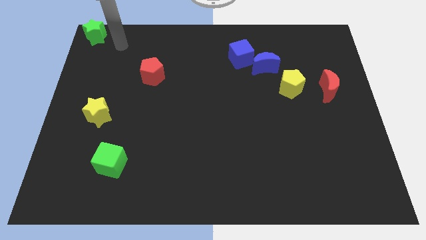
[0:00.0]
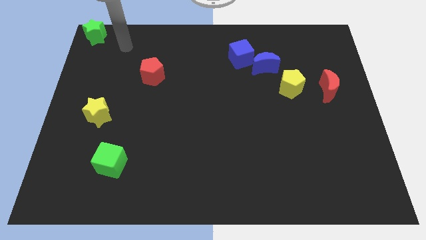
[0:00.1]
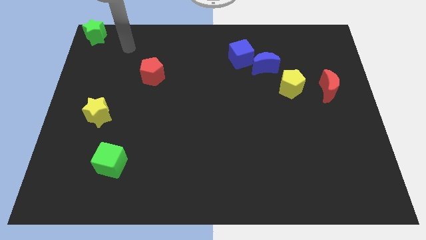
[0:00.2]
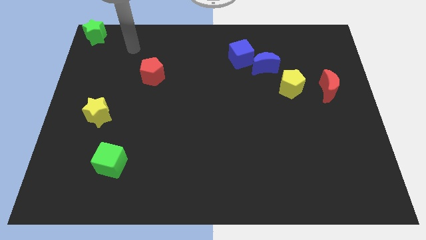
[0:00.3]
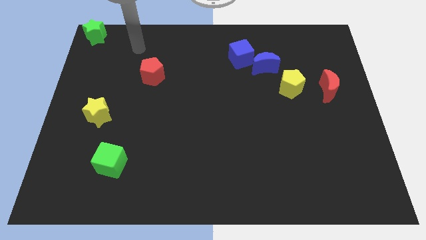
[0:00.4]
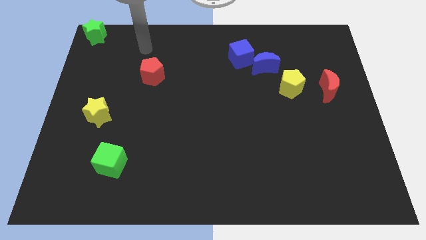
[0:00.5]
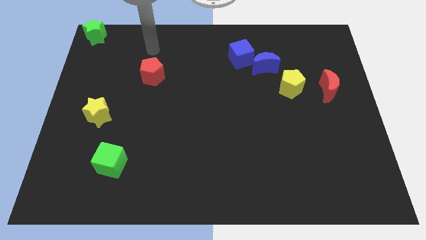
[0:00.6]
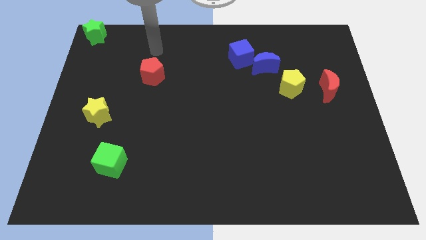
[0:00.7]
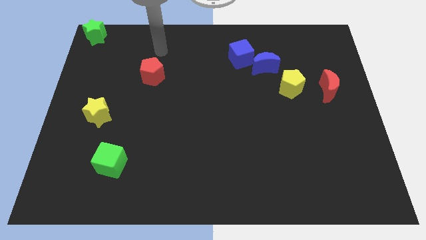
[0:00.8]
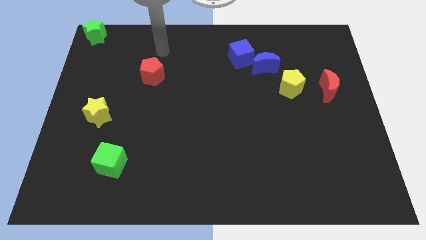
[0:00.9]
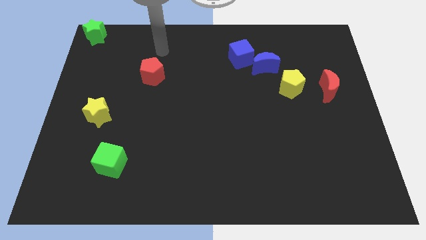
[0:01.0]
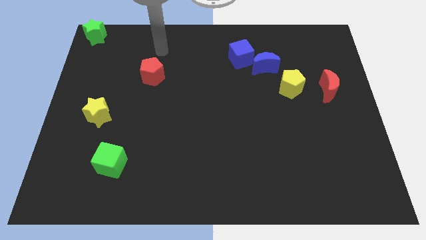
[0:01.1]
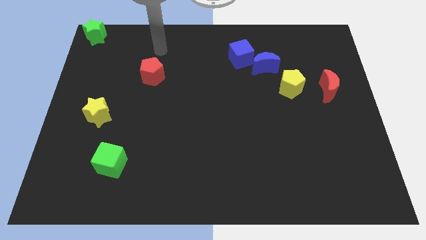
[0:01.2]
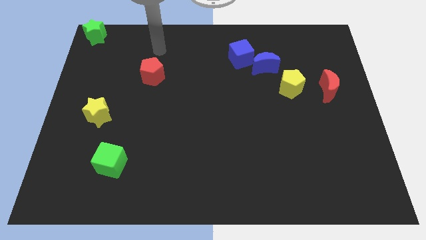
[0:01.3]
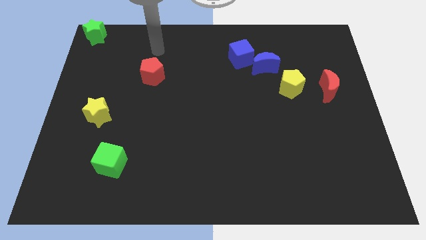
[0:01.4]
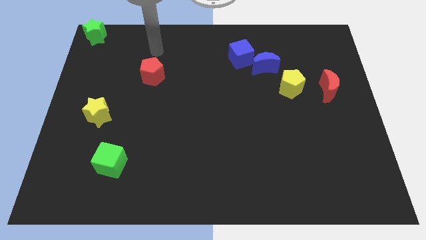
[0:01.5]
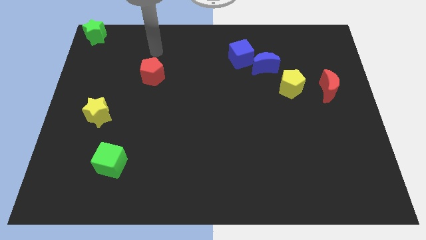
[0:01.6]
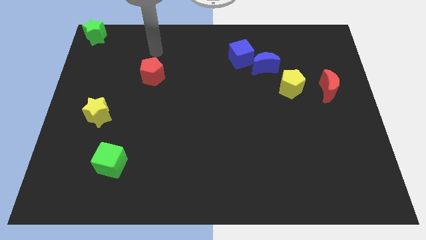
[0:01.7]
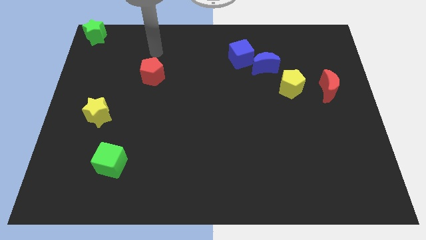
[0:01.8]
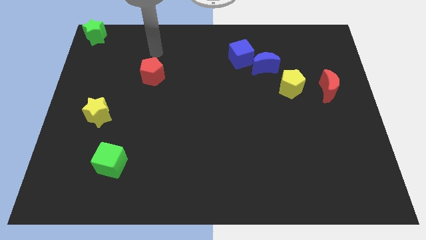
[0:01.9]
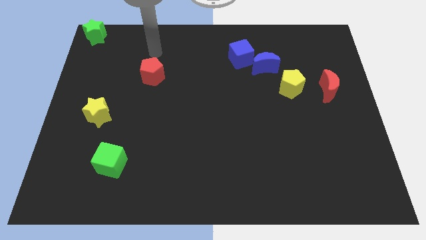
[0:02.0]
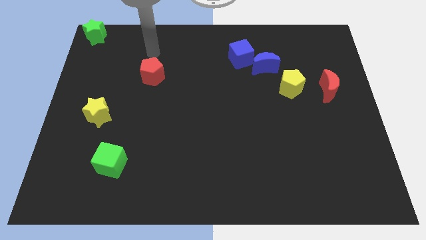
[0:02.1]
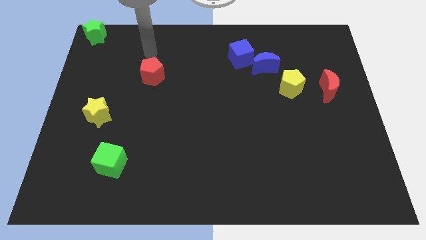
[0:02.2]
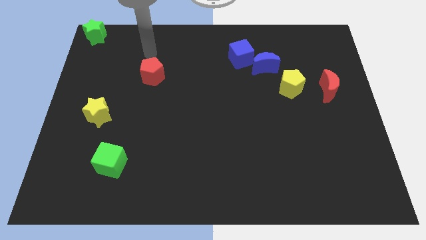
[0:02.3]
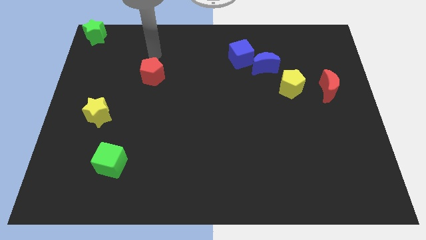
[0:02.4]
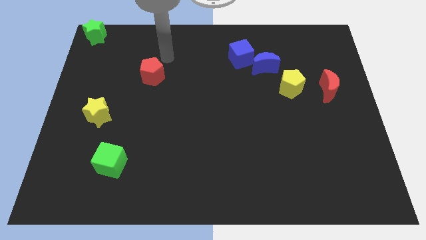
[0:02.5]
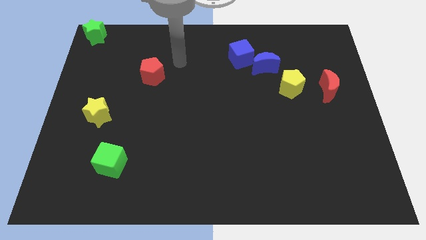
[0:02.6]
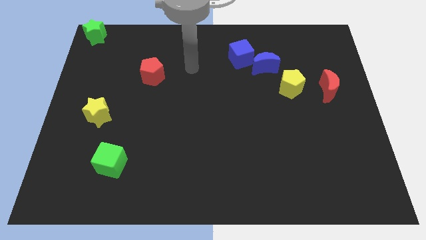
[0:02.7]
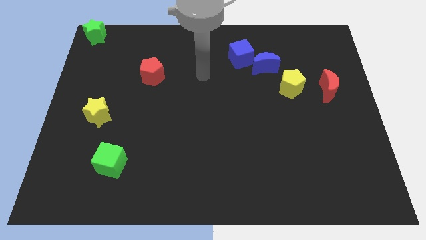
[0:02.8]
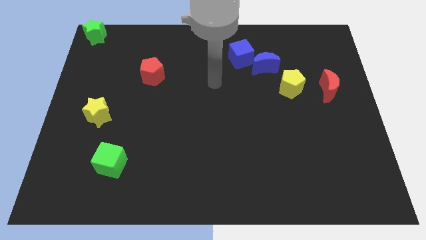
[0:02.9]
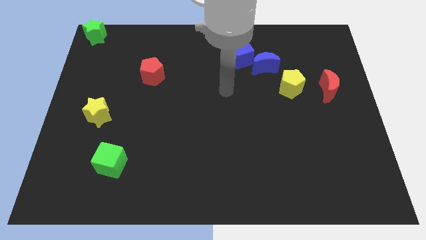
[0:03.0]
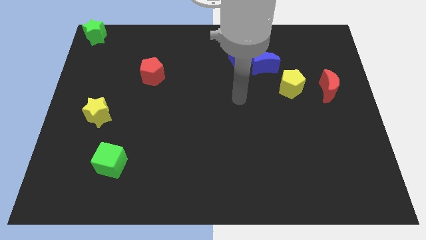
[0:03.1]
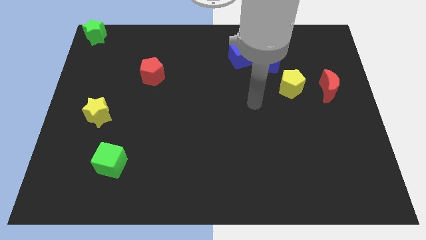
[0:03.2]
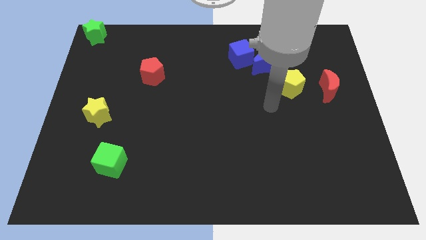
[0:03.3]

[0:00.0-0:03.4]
move your arm away from the green star

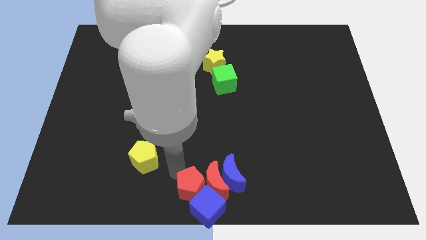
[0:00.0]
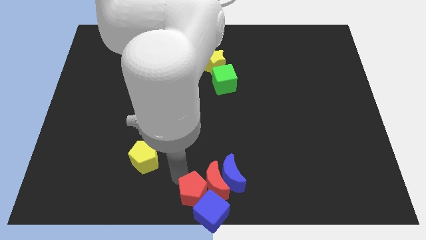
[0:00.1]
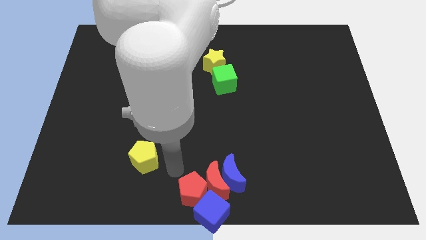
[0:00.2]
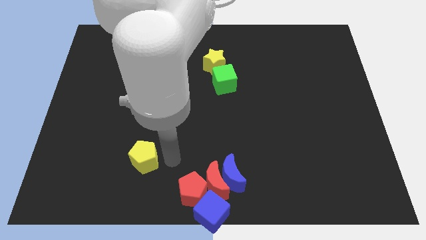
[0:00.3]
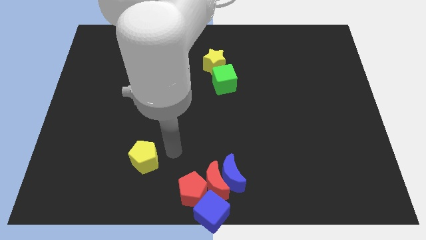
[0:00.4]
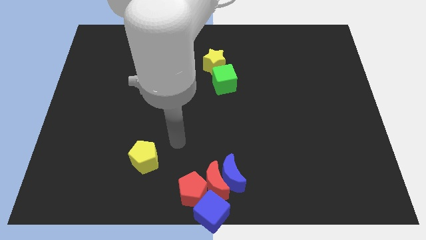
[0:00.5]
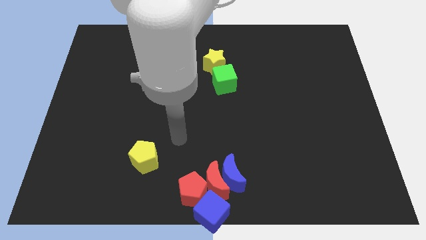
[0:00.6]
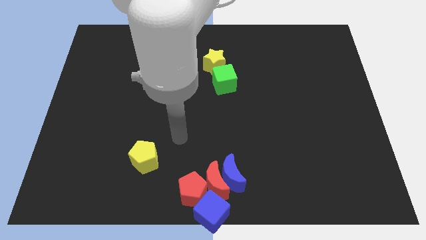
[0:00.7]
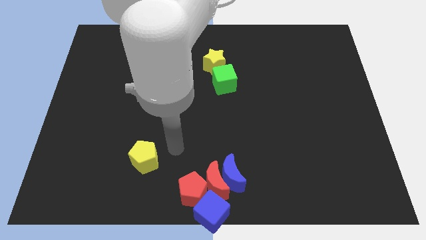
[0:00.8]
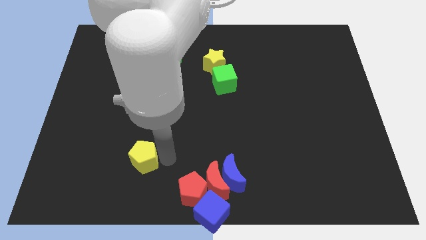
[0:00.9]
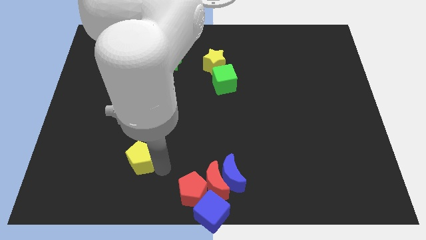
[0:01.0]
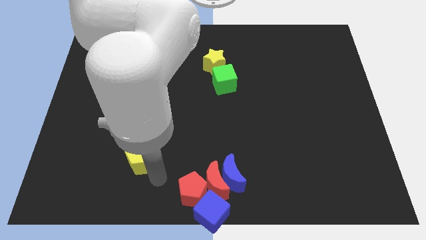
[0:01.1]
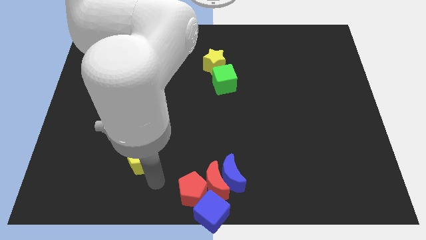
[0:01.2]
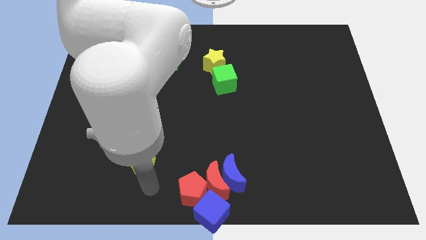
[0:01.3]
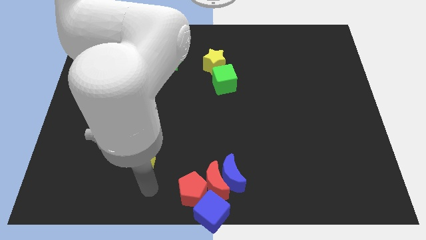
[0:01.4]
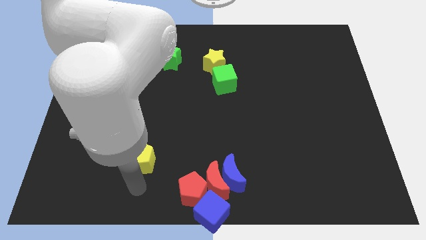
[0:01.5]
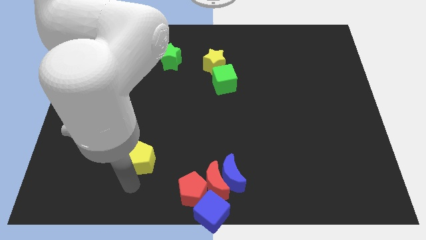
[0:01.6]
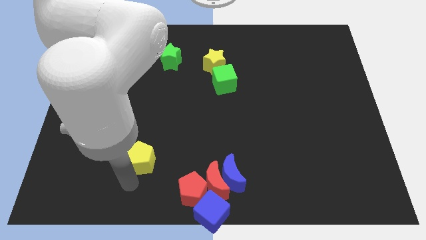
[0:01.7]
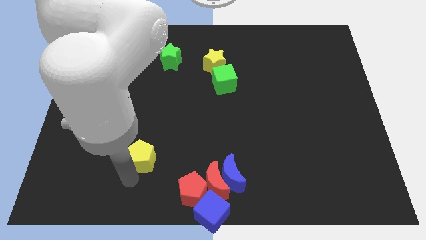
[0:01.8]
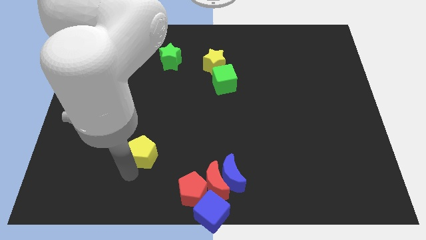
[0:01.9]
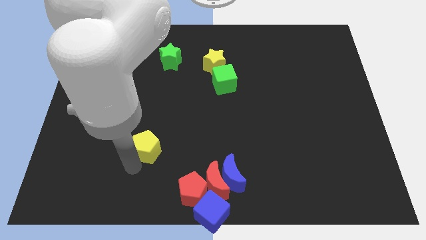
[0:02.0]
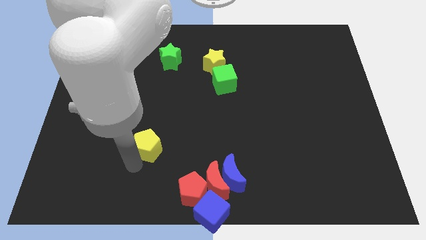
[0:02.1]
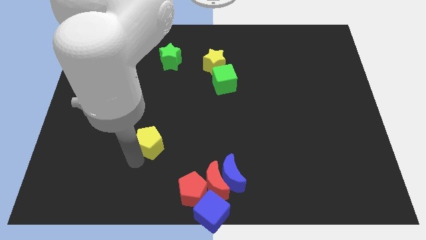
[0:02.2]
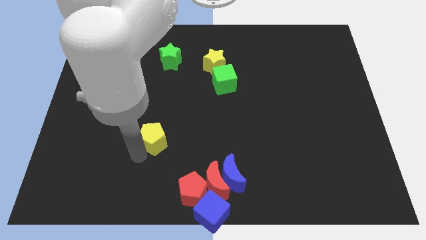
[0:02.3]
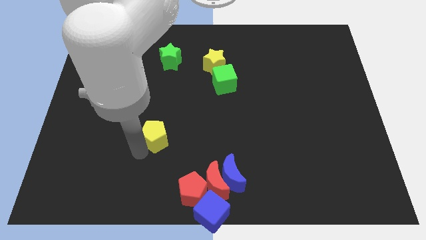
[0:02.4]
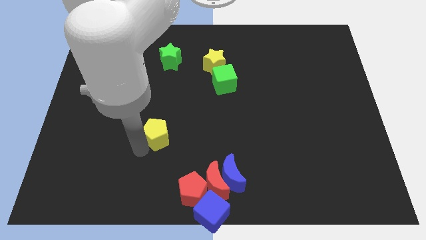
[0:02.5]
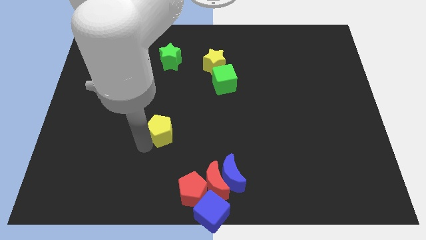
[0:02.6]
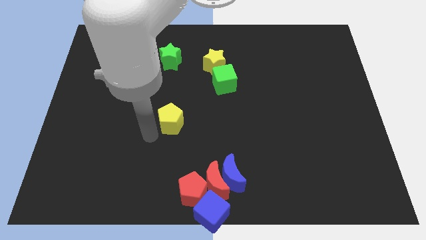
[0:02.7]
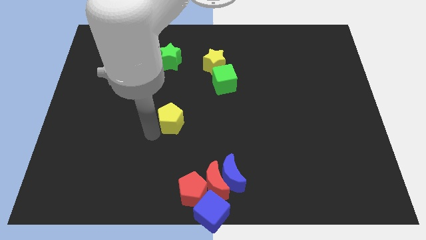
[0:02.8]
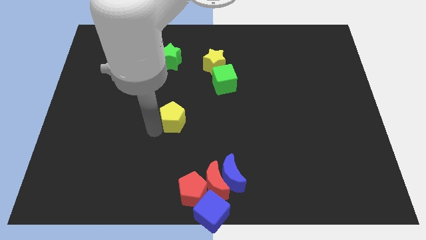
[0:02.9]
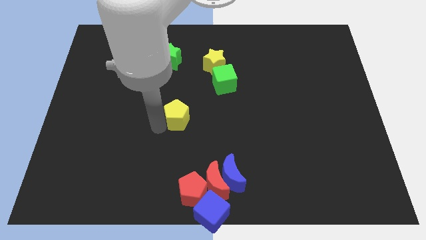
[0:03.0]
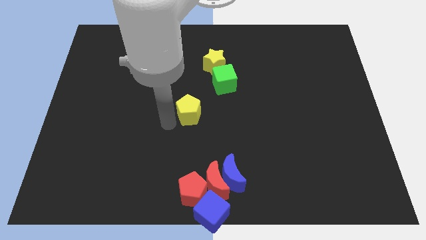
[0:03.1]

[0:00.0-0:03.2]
move the yellow pentagon to the center

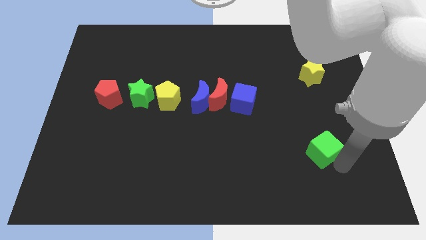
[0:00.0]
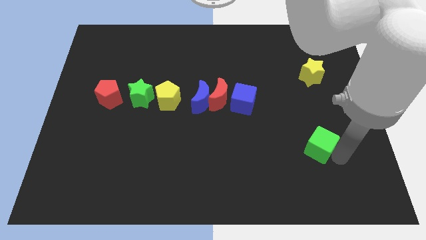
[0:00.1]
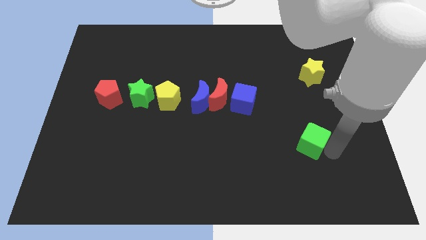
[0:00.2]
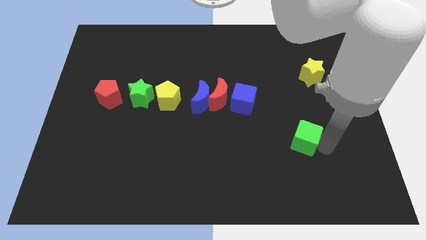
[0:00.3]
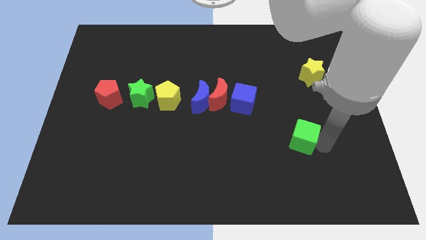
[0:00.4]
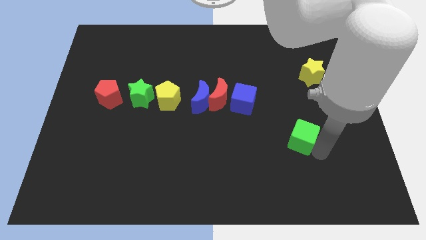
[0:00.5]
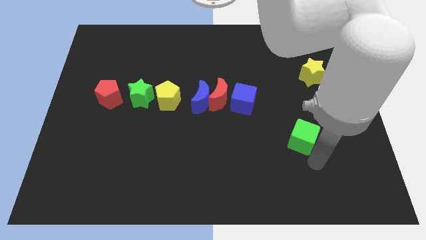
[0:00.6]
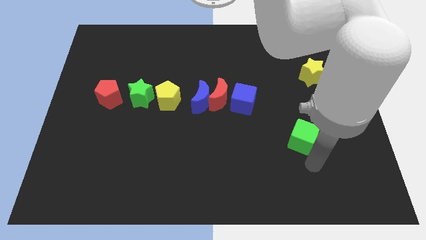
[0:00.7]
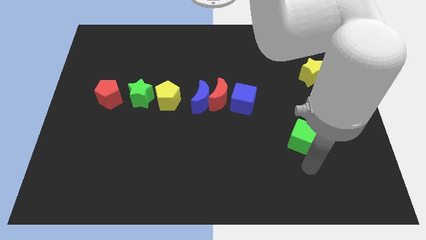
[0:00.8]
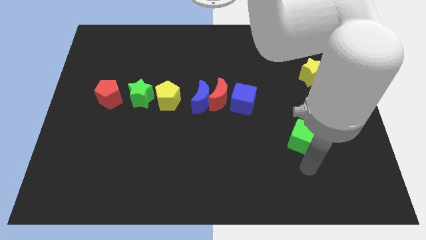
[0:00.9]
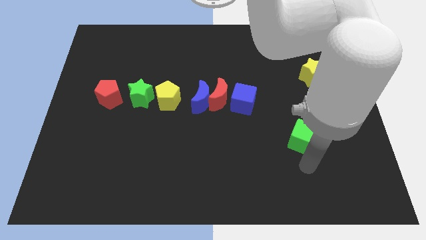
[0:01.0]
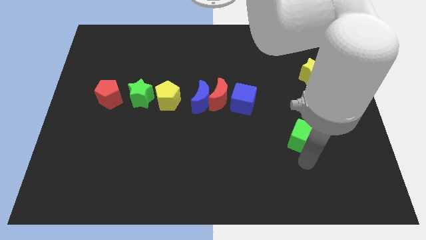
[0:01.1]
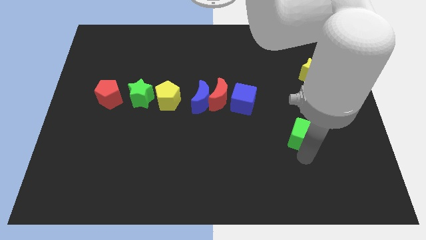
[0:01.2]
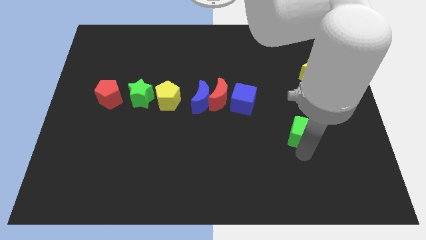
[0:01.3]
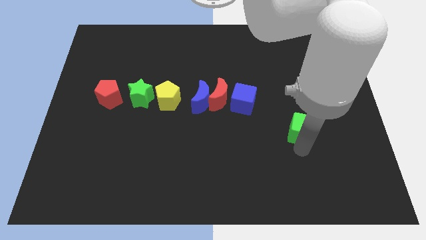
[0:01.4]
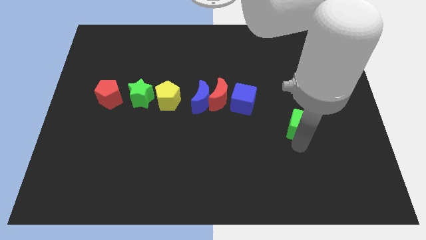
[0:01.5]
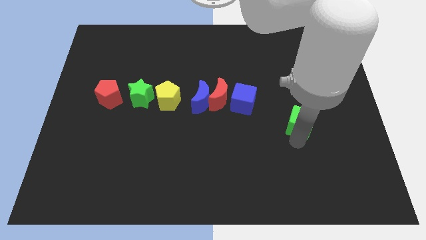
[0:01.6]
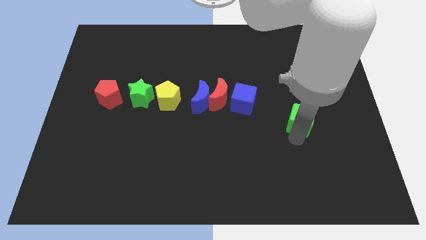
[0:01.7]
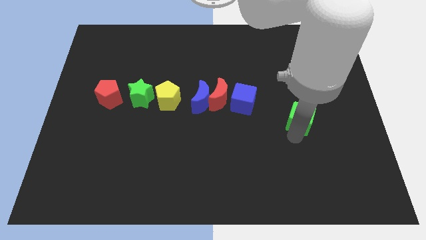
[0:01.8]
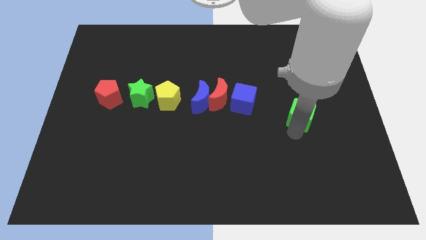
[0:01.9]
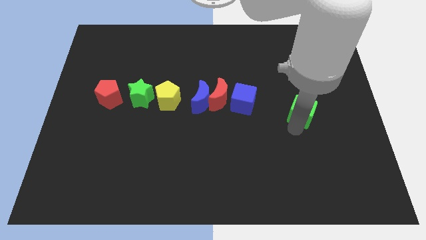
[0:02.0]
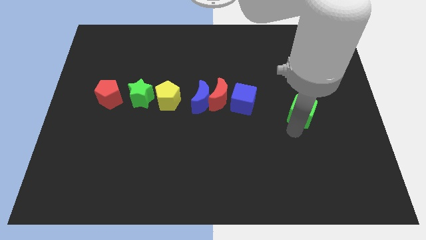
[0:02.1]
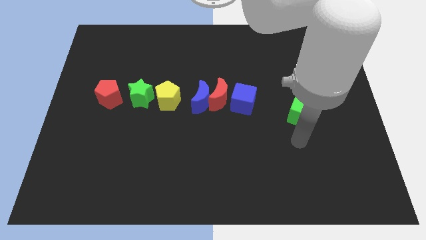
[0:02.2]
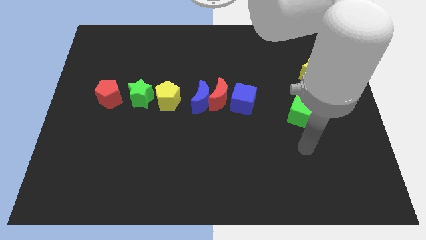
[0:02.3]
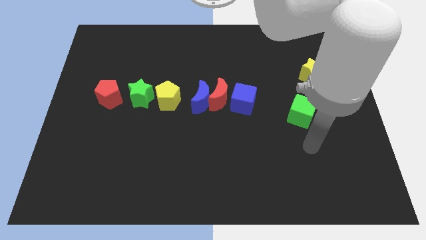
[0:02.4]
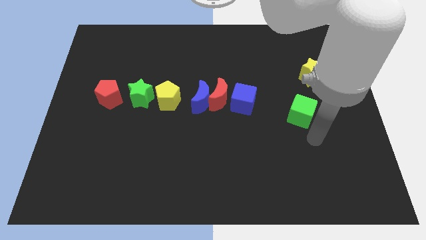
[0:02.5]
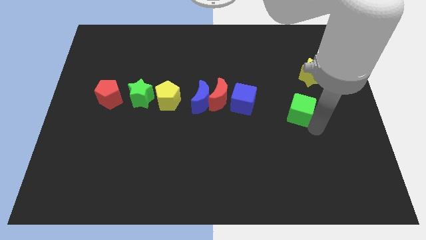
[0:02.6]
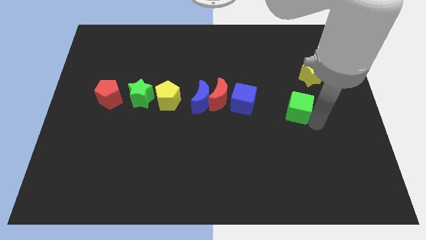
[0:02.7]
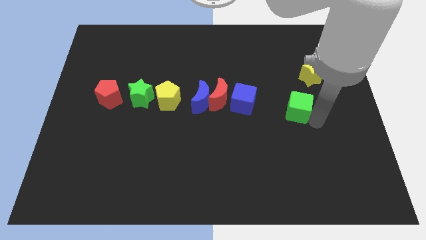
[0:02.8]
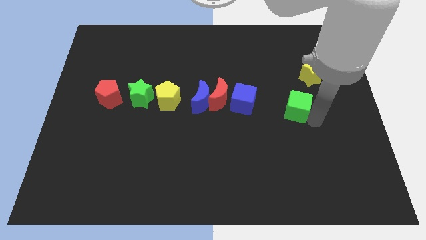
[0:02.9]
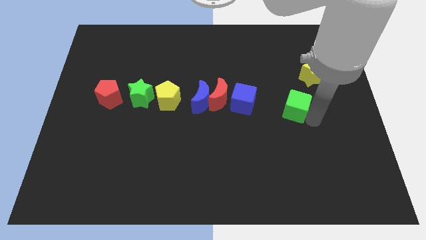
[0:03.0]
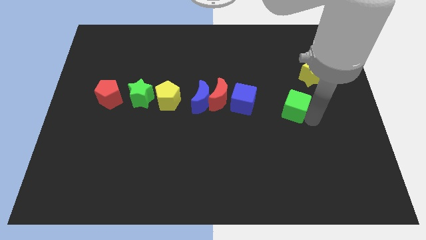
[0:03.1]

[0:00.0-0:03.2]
push the green cube towards the right to the blue cube
